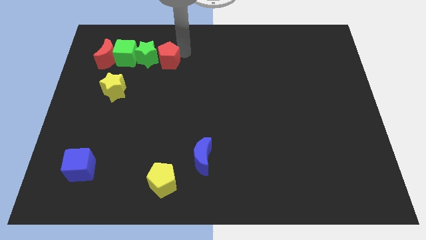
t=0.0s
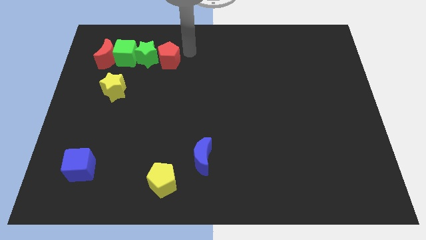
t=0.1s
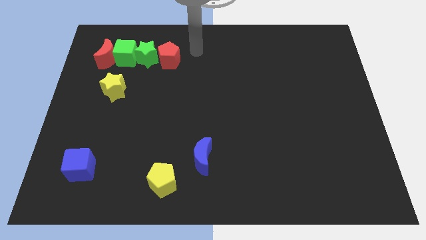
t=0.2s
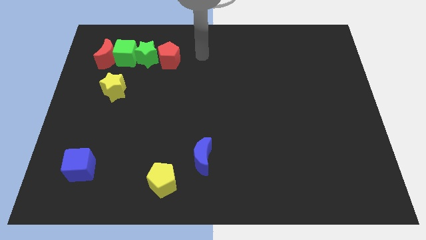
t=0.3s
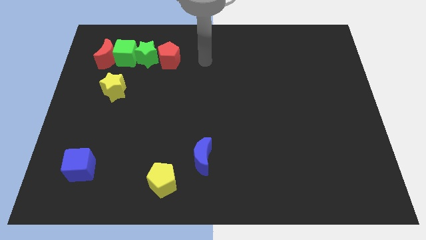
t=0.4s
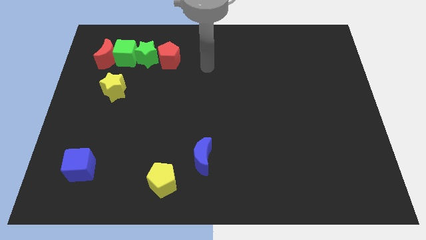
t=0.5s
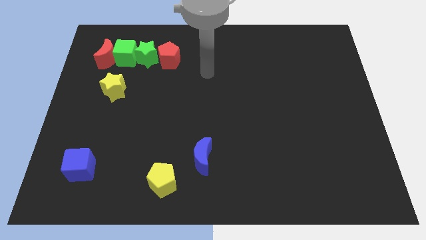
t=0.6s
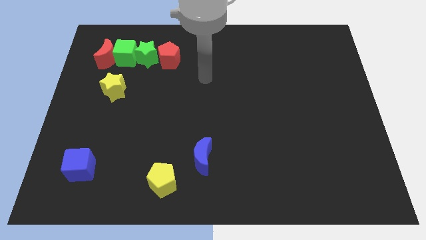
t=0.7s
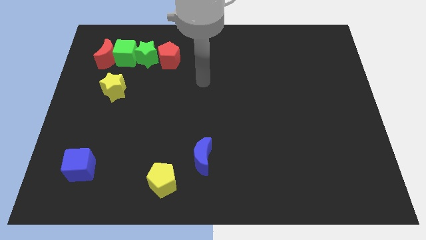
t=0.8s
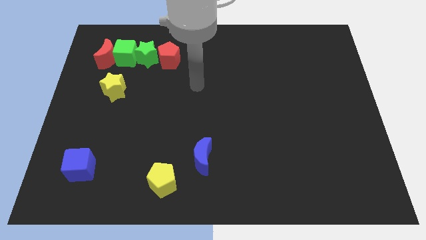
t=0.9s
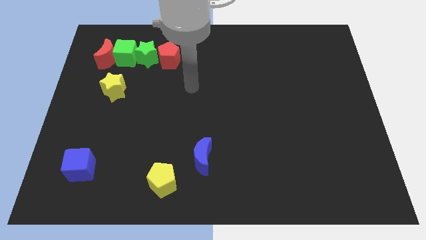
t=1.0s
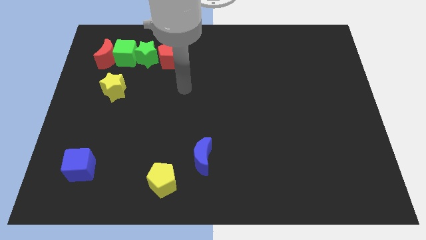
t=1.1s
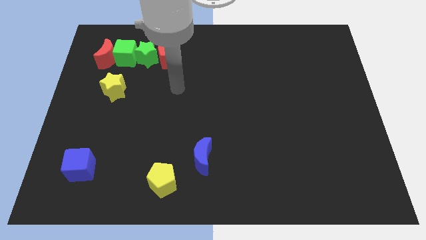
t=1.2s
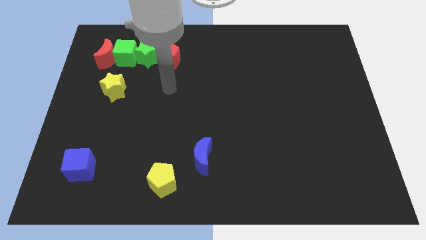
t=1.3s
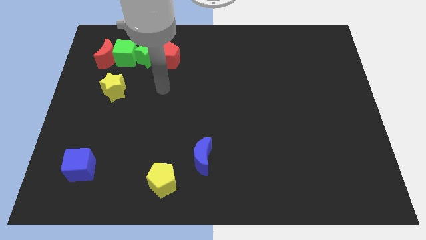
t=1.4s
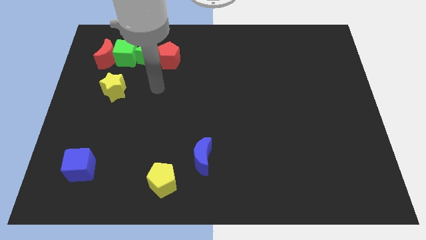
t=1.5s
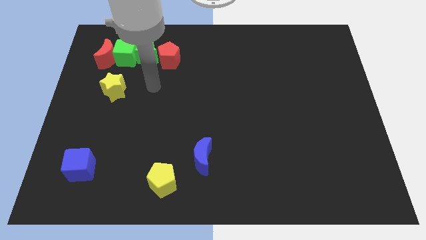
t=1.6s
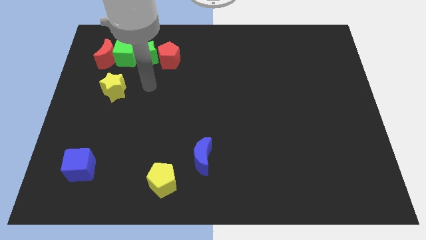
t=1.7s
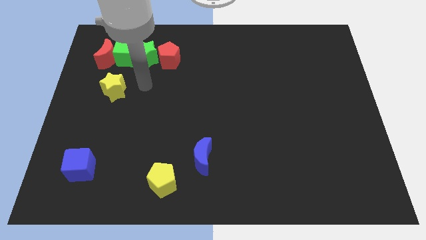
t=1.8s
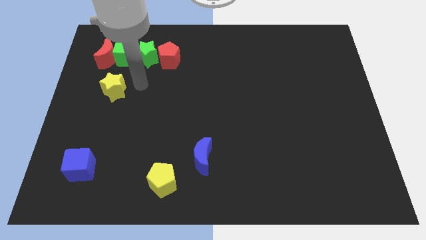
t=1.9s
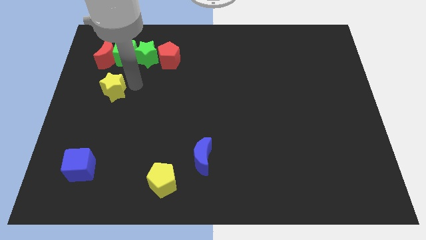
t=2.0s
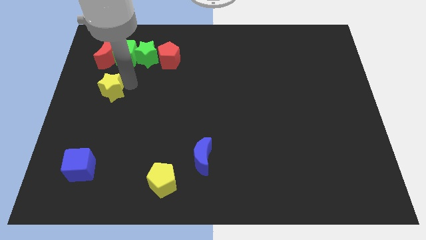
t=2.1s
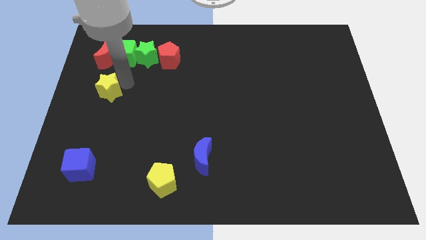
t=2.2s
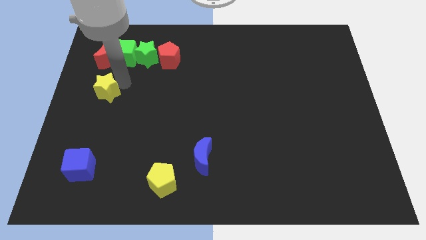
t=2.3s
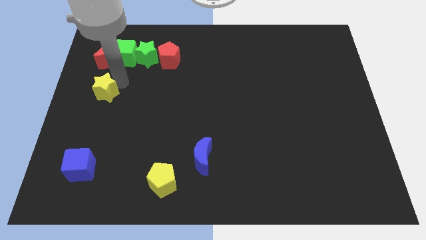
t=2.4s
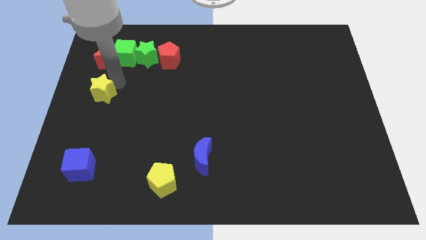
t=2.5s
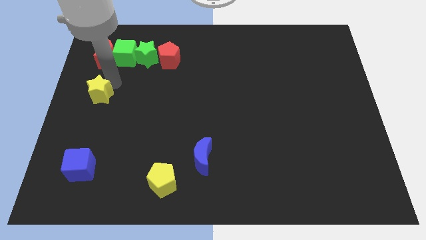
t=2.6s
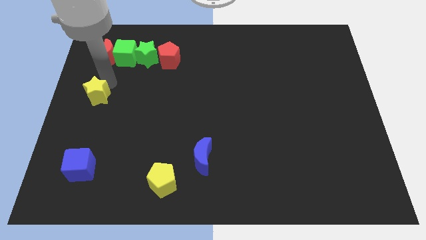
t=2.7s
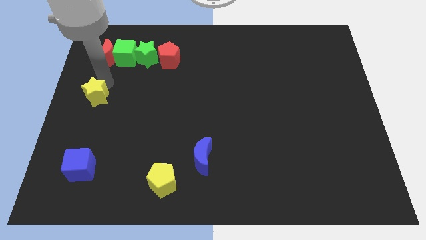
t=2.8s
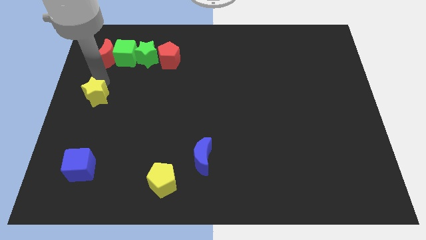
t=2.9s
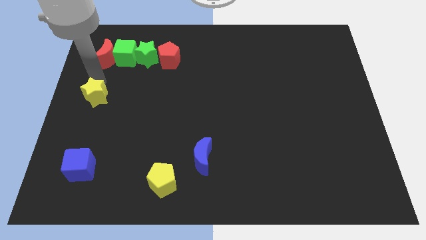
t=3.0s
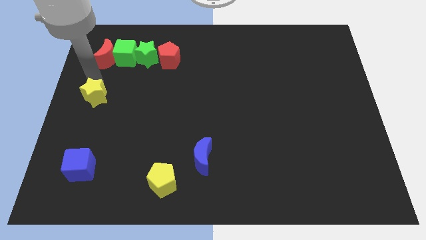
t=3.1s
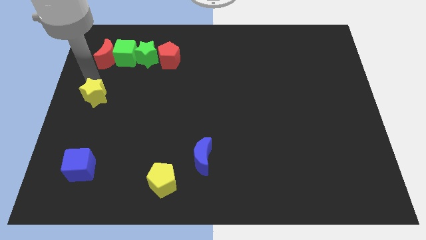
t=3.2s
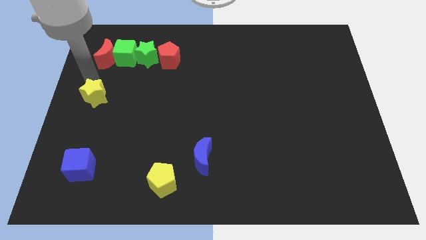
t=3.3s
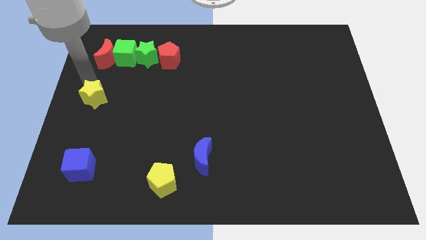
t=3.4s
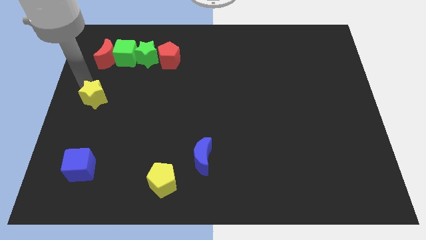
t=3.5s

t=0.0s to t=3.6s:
place the yellow star in between the blue cube and the red moon

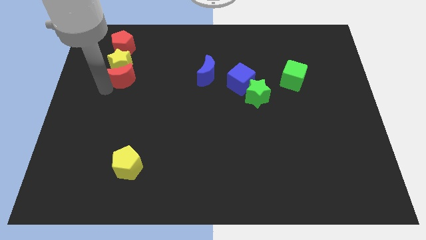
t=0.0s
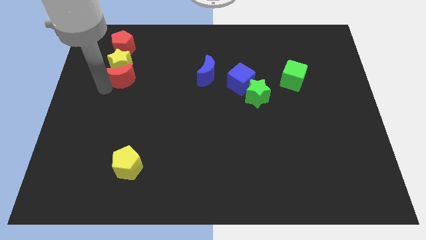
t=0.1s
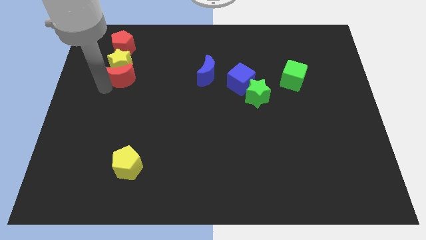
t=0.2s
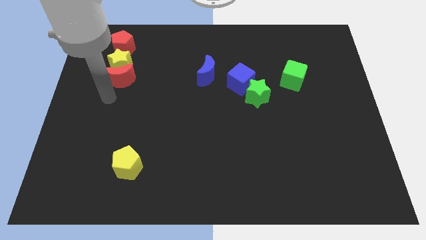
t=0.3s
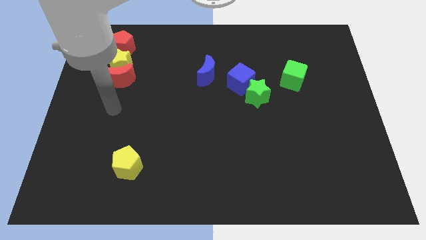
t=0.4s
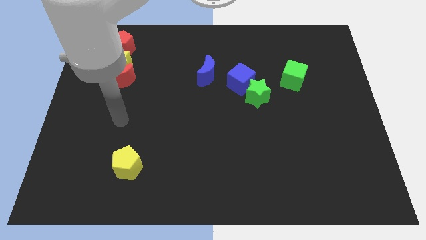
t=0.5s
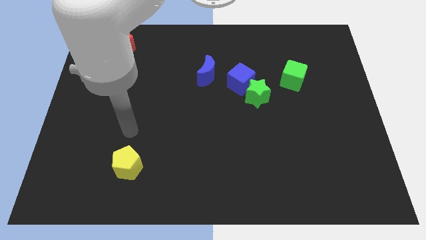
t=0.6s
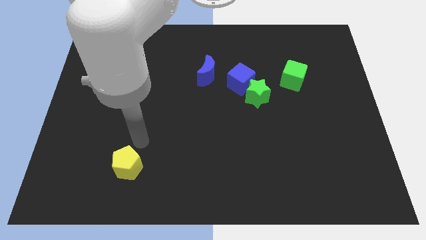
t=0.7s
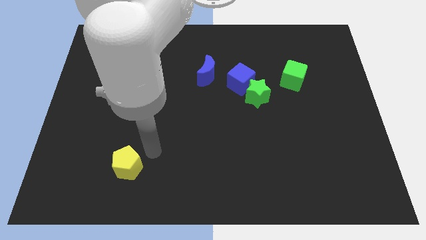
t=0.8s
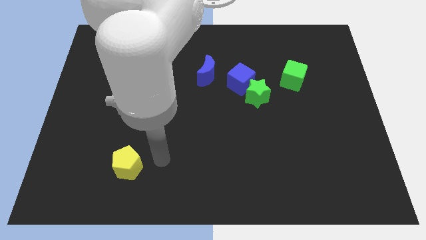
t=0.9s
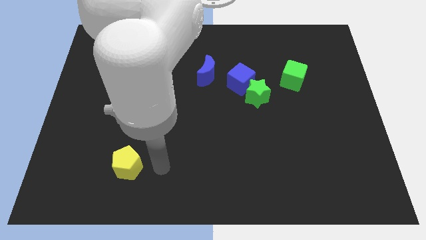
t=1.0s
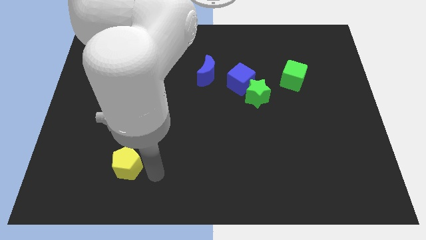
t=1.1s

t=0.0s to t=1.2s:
go away from the red moon

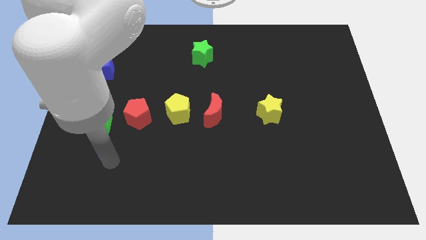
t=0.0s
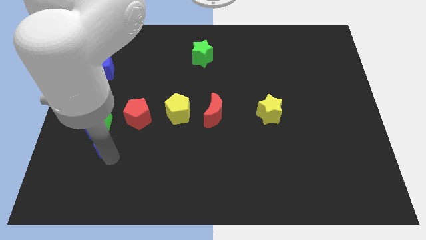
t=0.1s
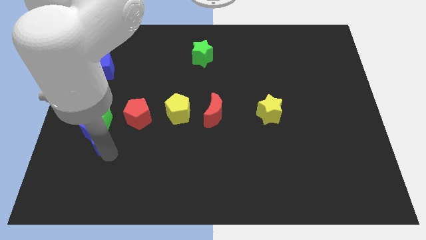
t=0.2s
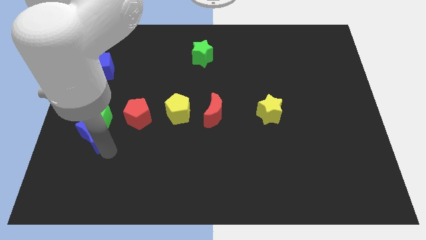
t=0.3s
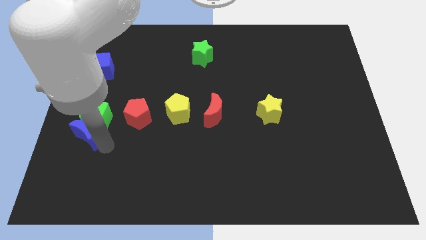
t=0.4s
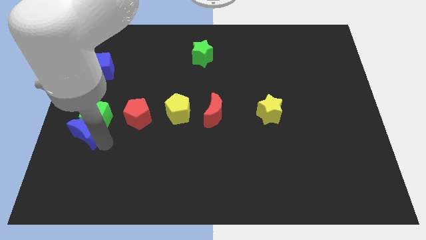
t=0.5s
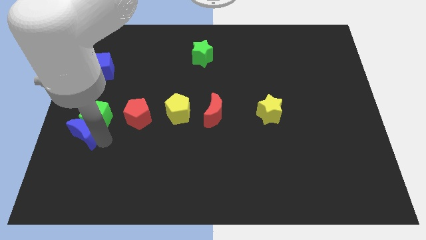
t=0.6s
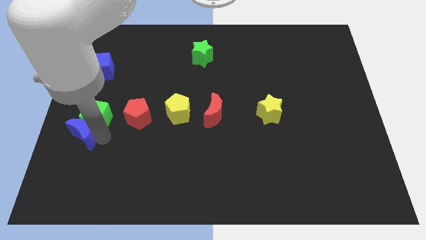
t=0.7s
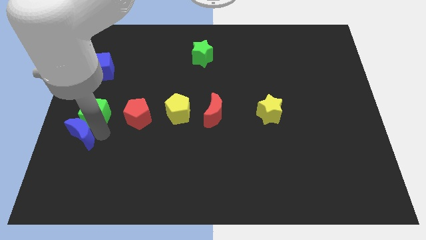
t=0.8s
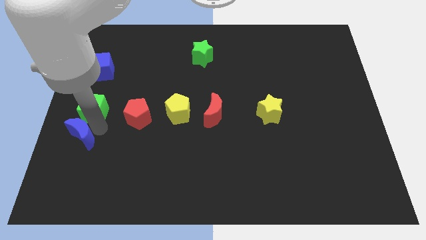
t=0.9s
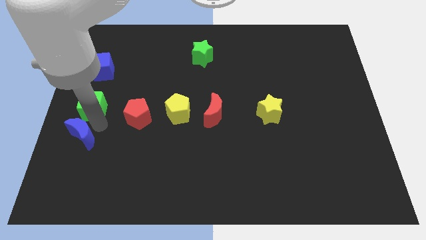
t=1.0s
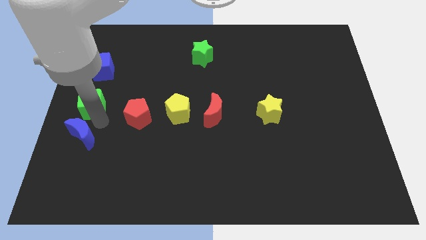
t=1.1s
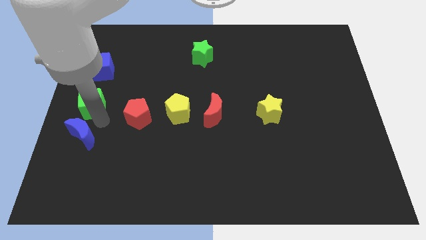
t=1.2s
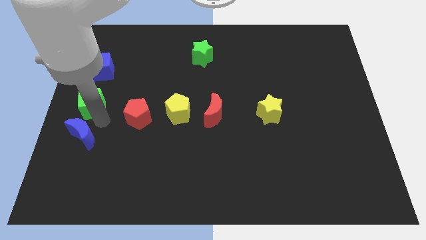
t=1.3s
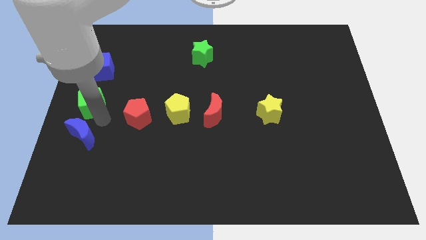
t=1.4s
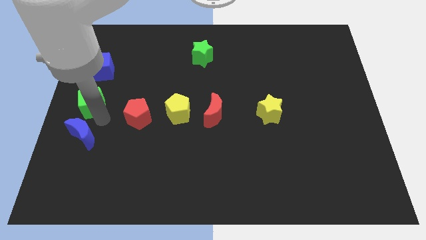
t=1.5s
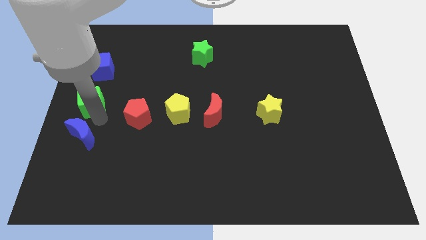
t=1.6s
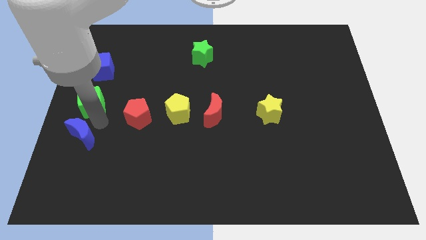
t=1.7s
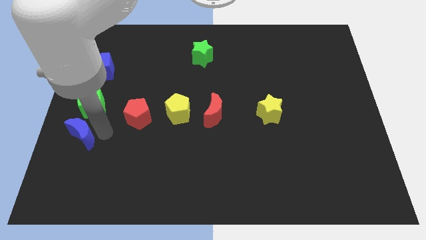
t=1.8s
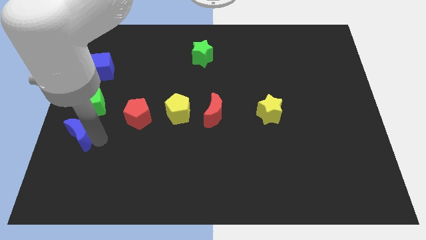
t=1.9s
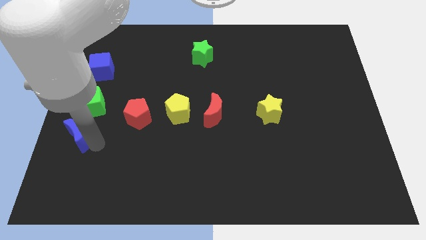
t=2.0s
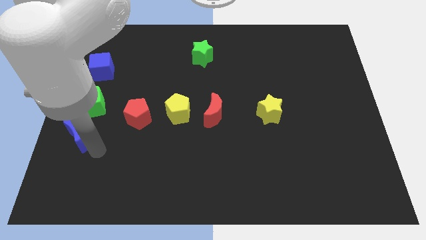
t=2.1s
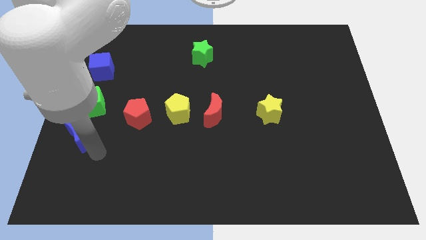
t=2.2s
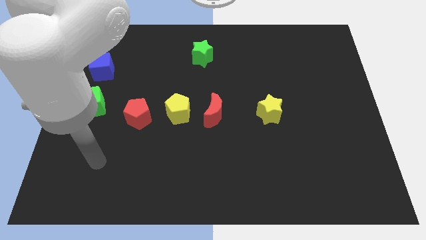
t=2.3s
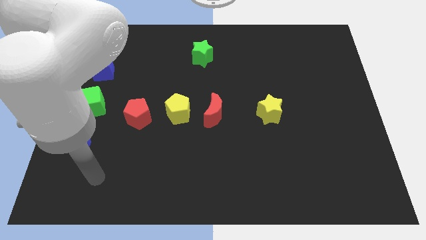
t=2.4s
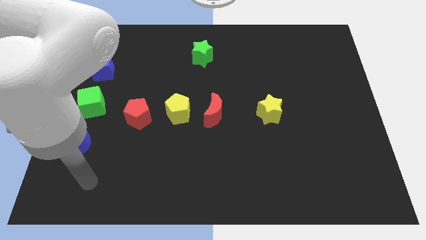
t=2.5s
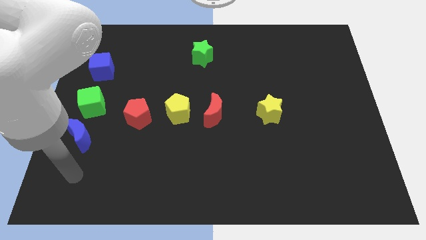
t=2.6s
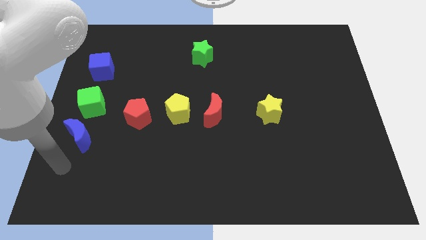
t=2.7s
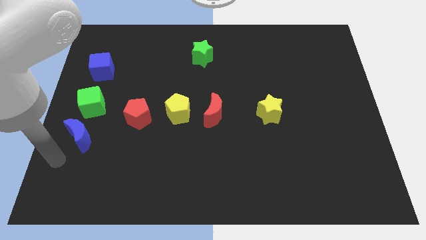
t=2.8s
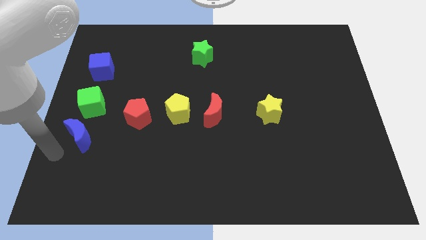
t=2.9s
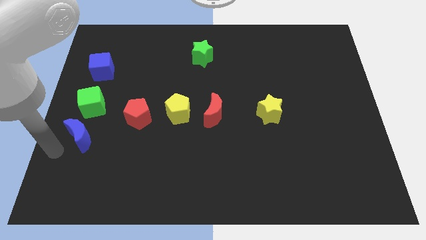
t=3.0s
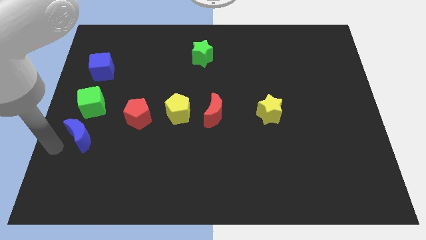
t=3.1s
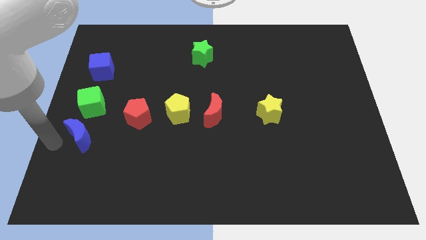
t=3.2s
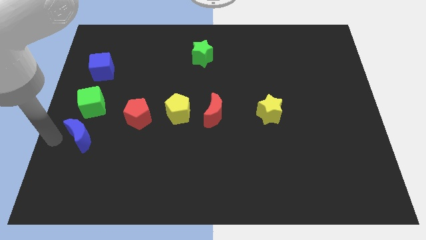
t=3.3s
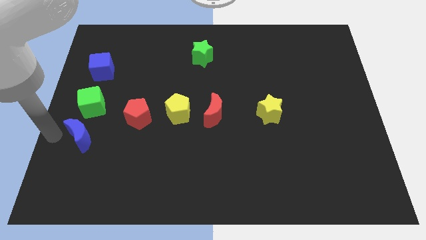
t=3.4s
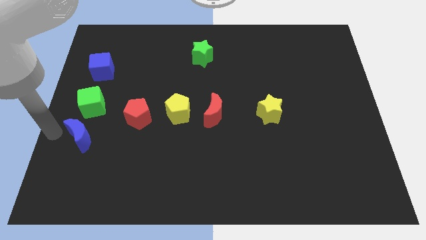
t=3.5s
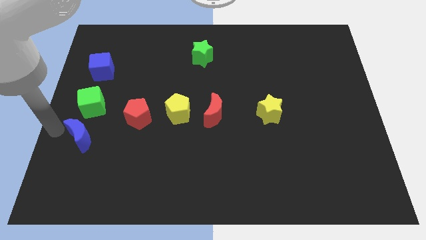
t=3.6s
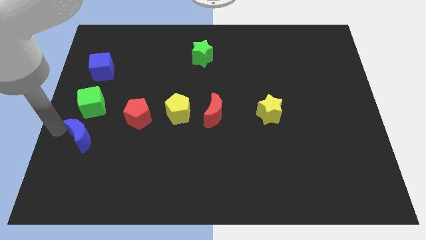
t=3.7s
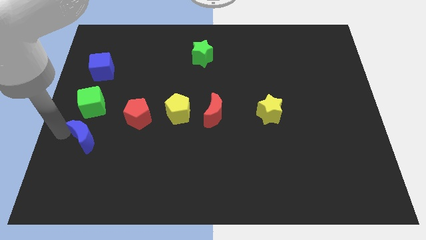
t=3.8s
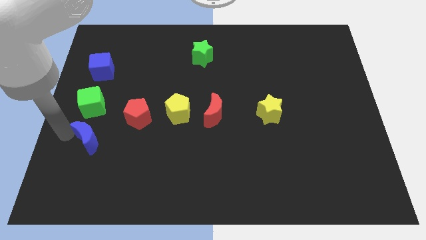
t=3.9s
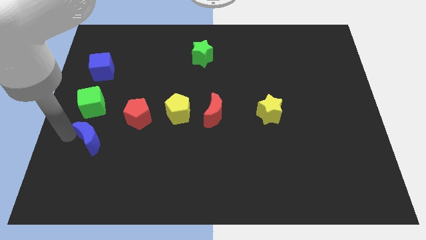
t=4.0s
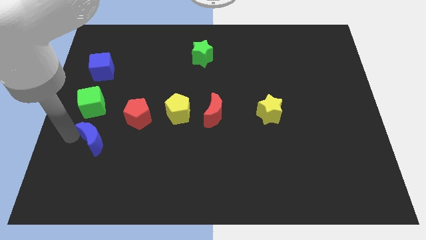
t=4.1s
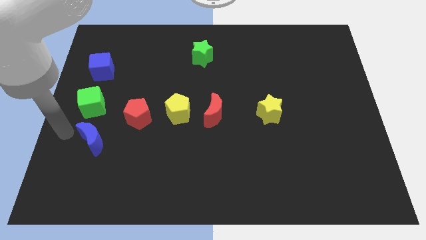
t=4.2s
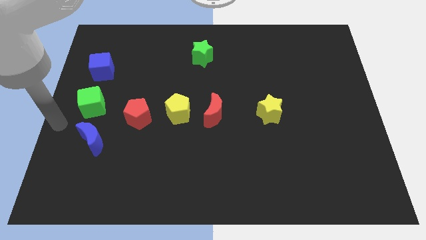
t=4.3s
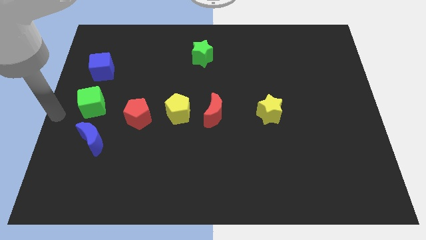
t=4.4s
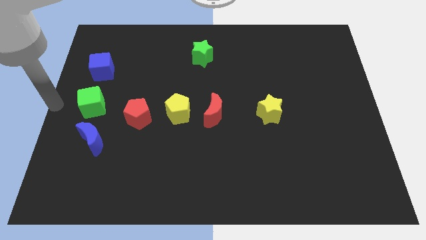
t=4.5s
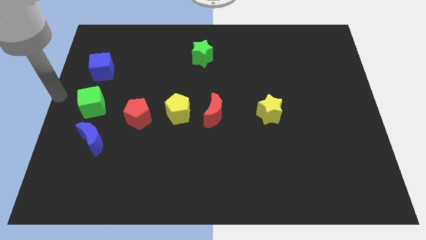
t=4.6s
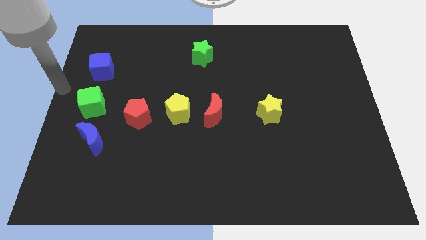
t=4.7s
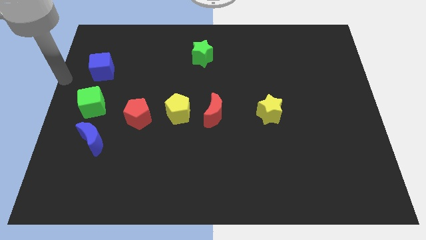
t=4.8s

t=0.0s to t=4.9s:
make a vertical line with the blue crescent green cube and blue cube at the left side of the board
